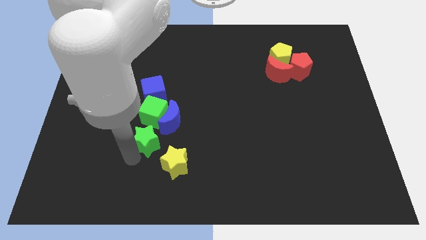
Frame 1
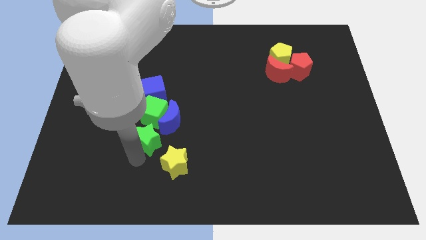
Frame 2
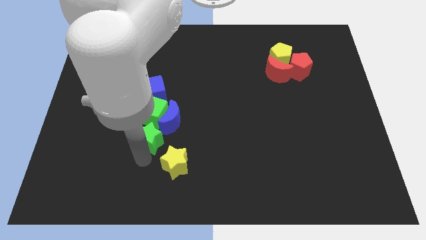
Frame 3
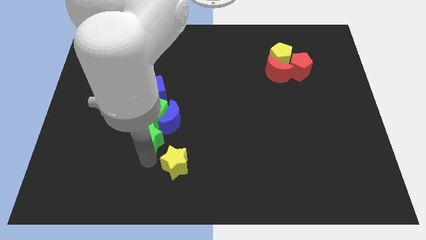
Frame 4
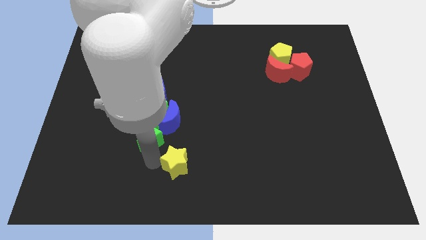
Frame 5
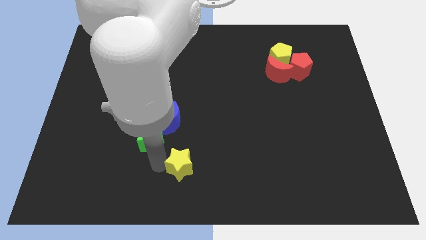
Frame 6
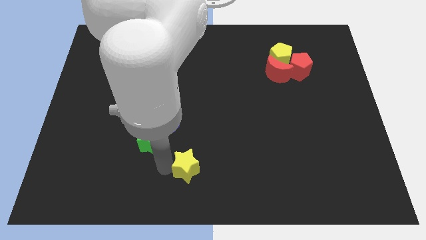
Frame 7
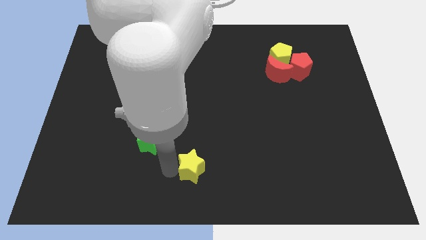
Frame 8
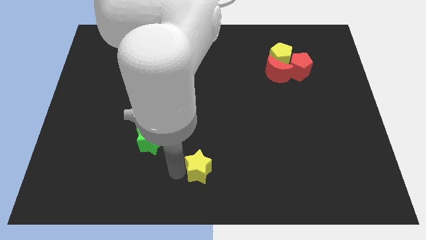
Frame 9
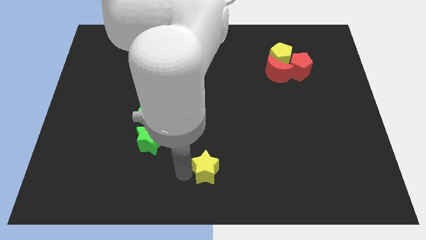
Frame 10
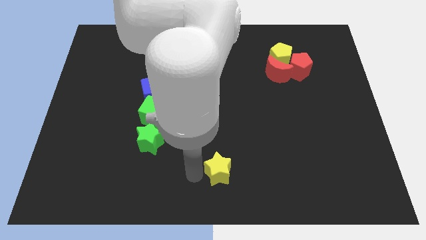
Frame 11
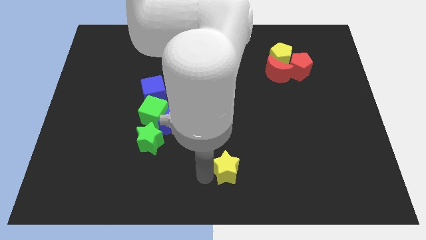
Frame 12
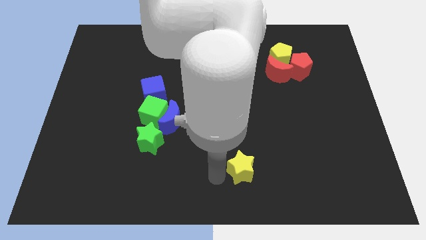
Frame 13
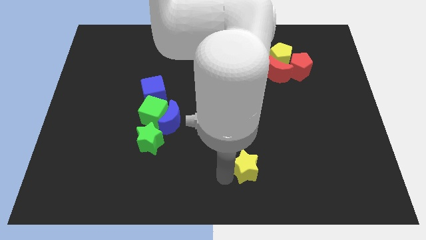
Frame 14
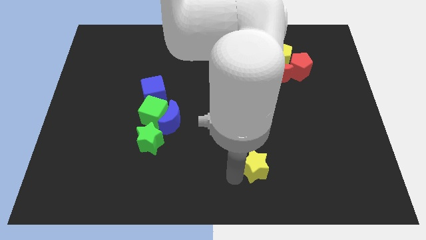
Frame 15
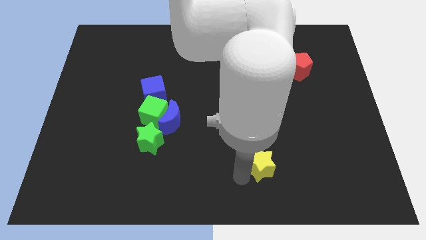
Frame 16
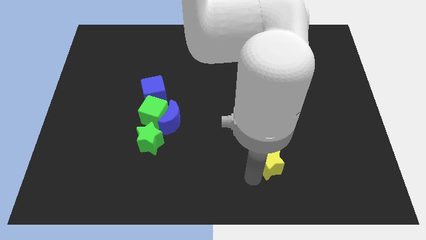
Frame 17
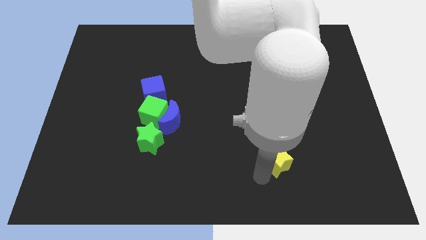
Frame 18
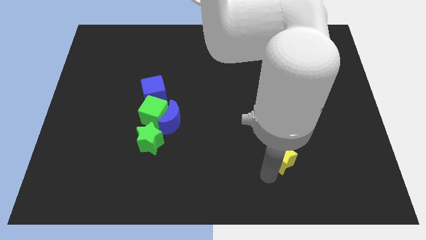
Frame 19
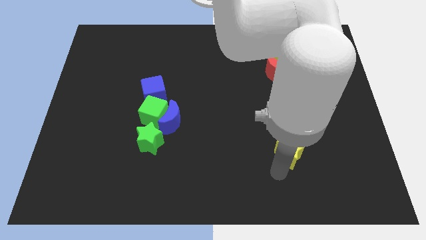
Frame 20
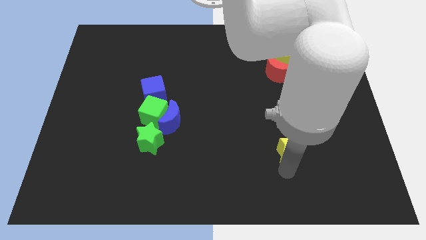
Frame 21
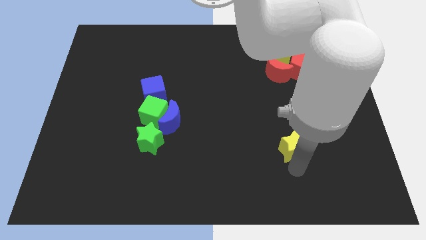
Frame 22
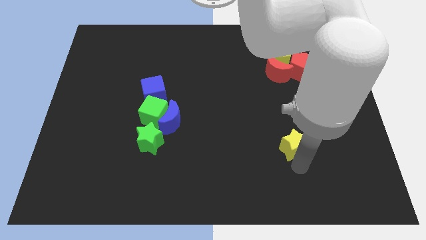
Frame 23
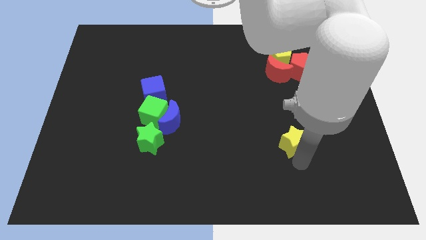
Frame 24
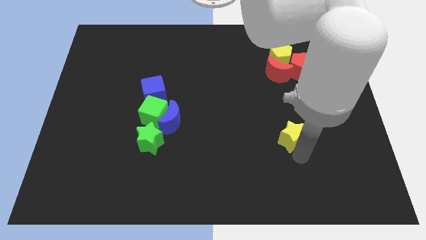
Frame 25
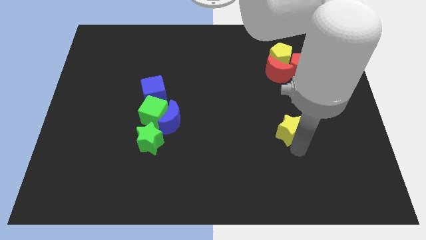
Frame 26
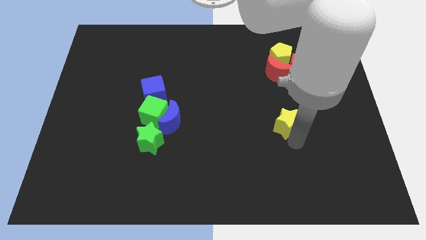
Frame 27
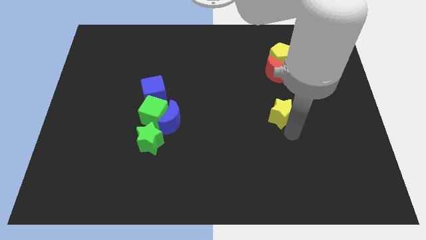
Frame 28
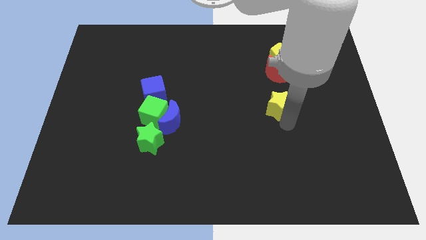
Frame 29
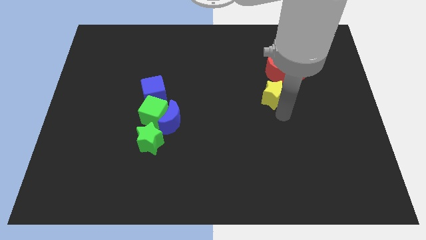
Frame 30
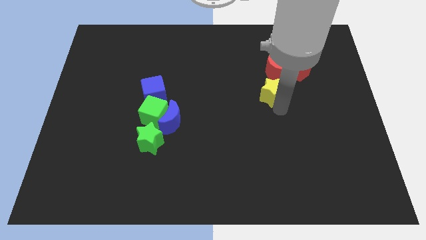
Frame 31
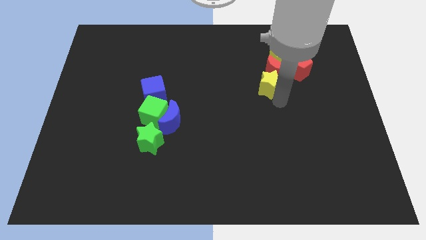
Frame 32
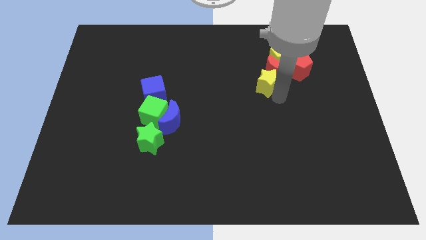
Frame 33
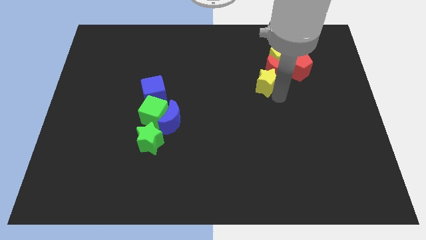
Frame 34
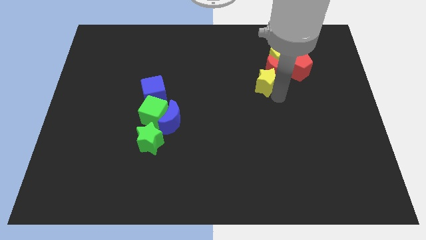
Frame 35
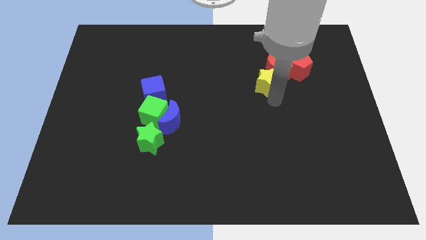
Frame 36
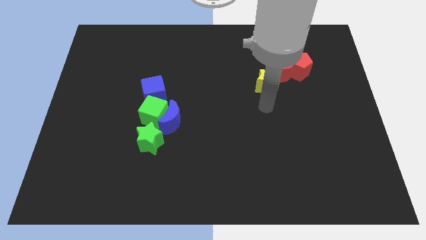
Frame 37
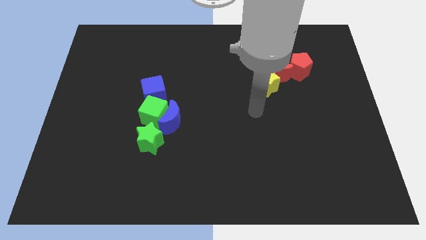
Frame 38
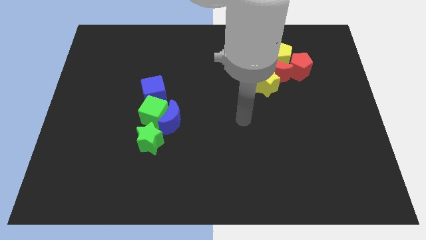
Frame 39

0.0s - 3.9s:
push the yellow star into the red crescent

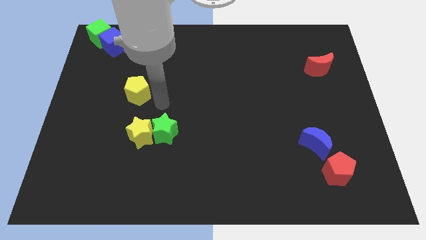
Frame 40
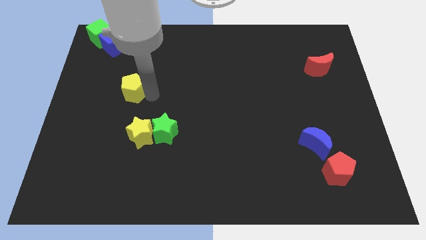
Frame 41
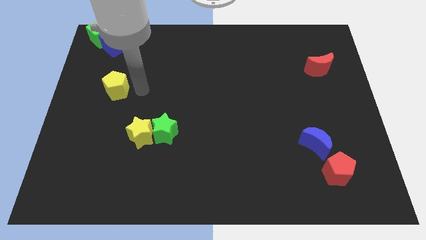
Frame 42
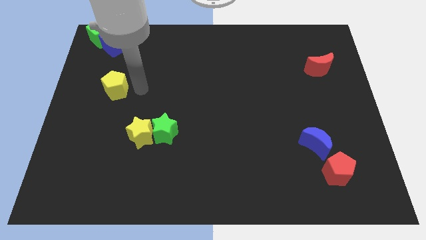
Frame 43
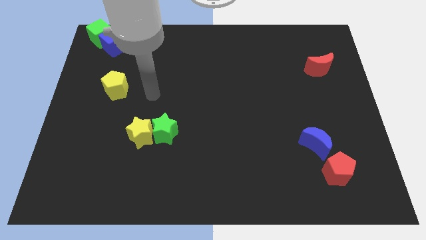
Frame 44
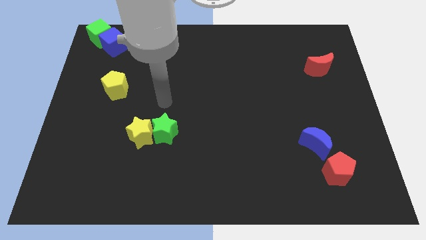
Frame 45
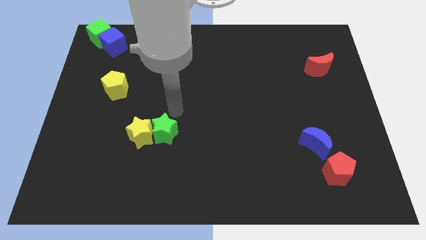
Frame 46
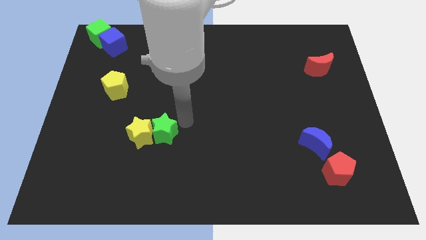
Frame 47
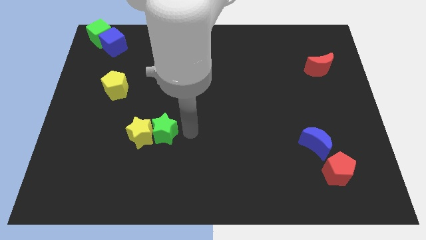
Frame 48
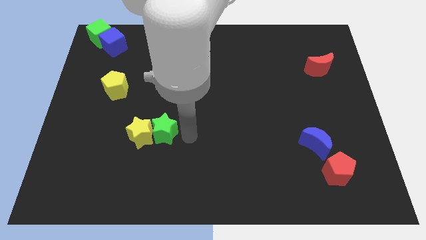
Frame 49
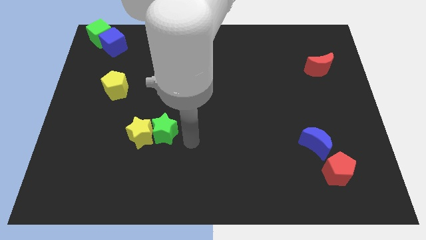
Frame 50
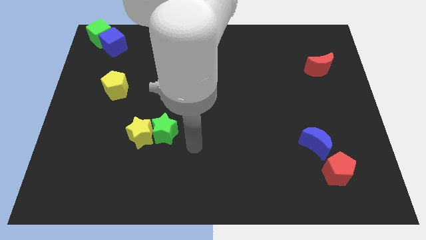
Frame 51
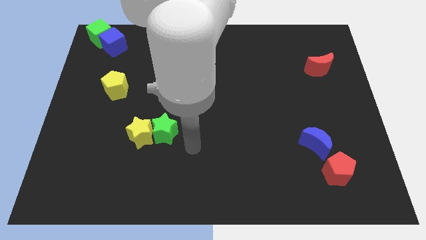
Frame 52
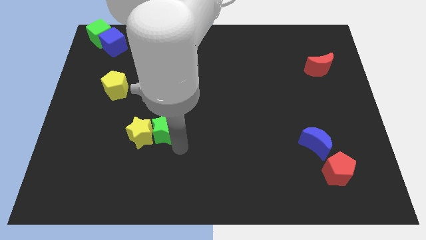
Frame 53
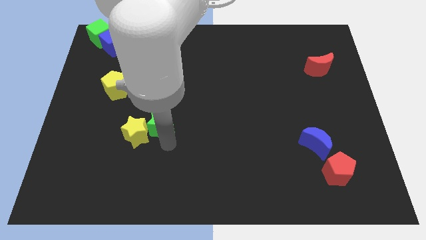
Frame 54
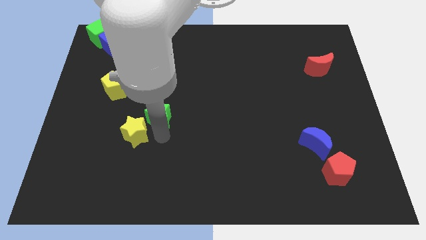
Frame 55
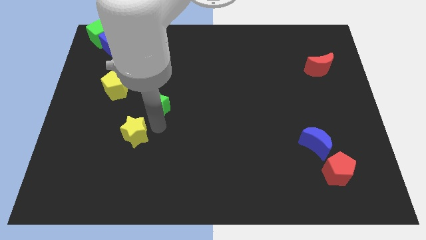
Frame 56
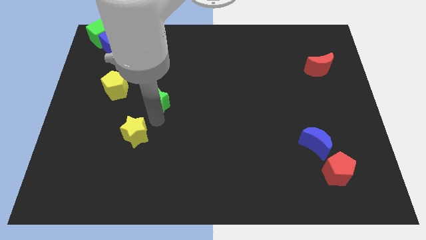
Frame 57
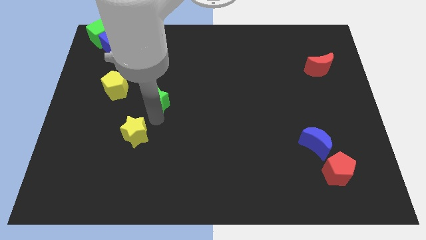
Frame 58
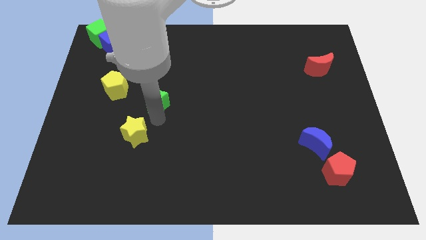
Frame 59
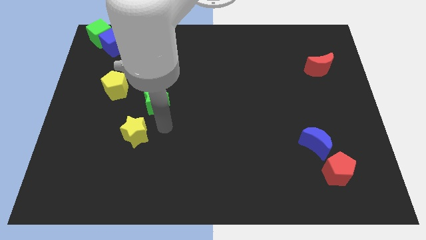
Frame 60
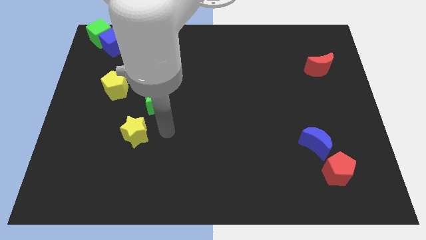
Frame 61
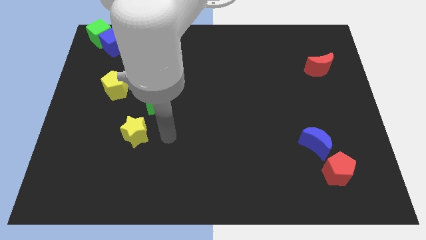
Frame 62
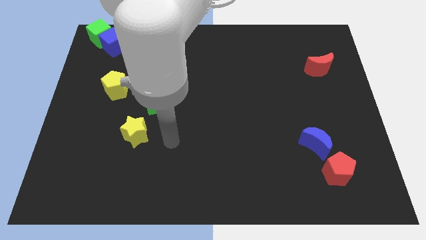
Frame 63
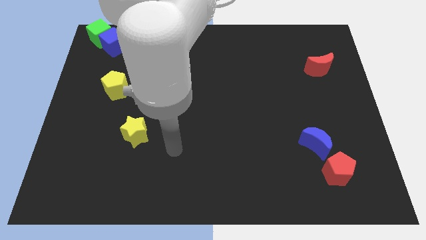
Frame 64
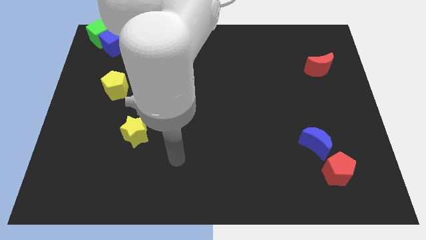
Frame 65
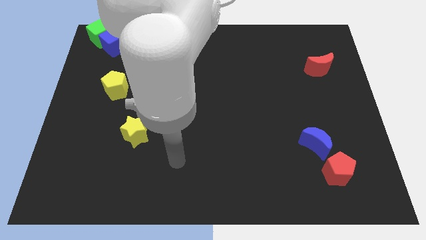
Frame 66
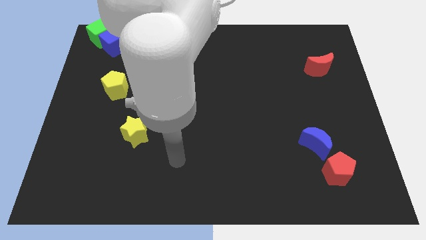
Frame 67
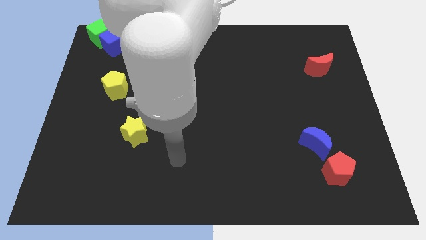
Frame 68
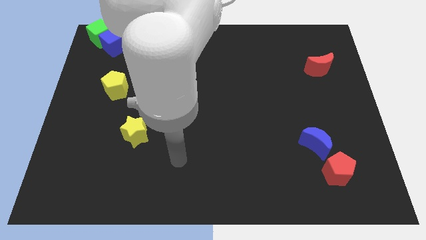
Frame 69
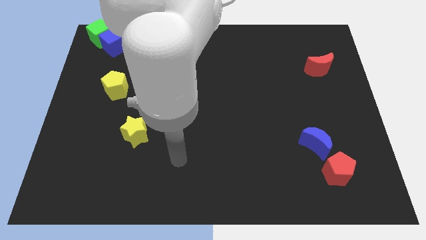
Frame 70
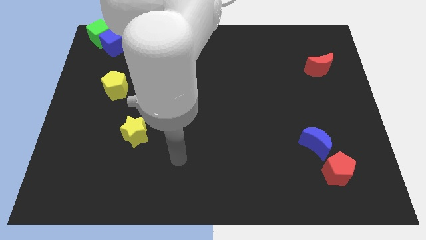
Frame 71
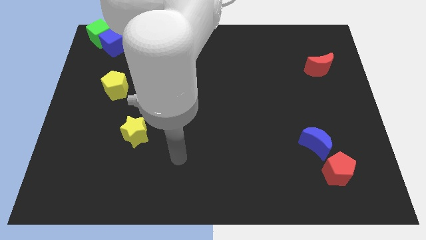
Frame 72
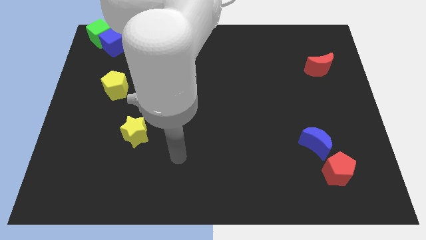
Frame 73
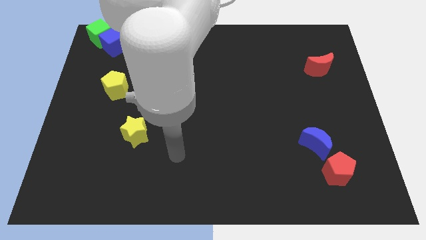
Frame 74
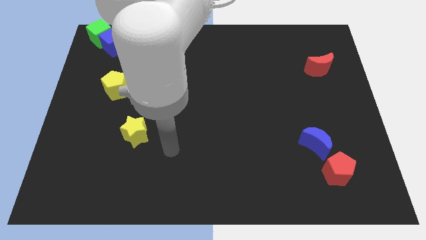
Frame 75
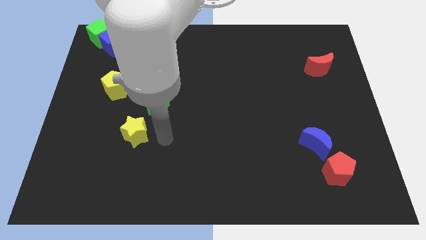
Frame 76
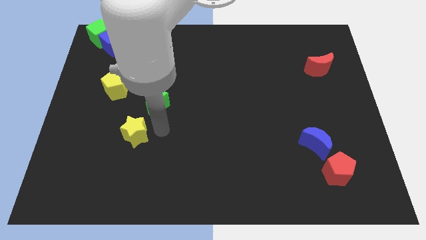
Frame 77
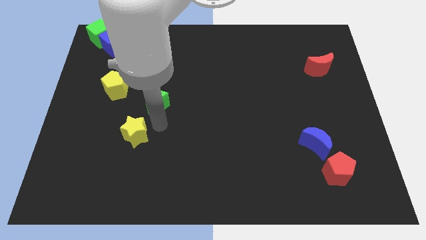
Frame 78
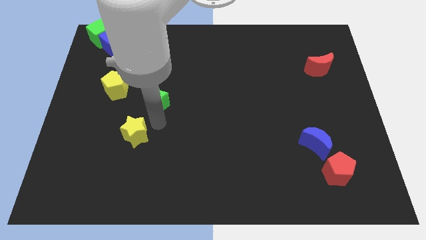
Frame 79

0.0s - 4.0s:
push the green star away from the yellow star

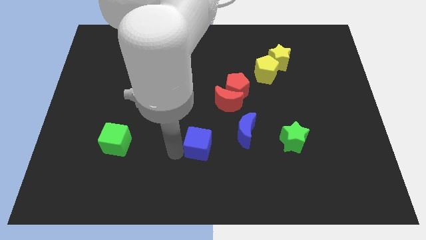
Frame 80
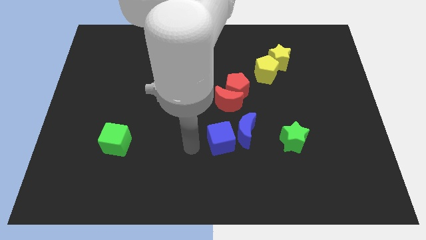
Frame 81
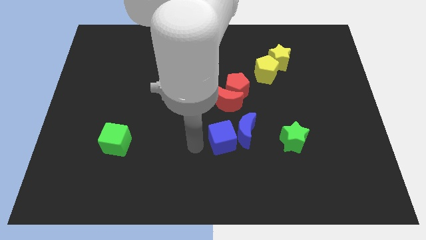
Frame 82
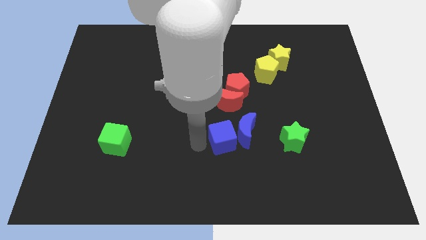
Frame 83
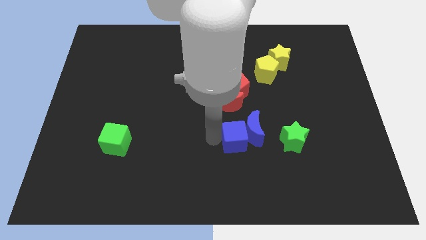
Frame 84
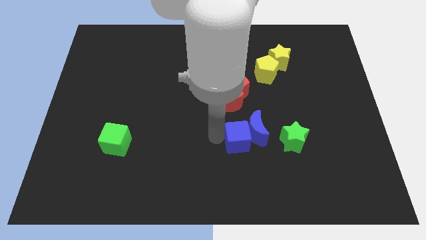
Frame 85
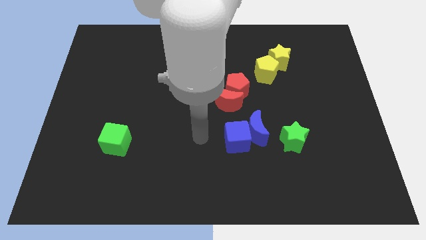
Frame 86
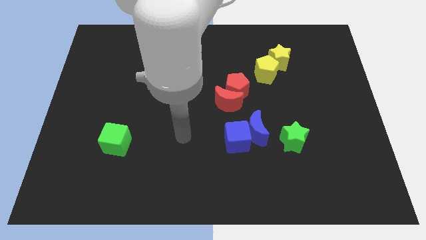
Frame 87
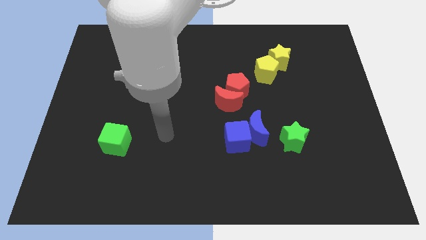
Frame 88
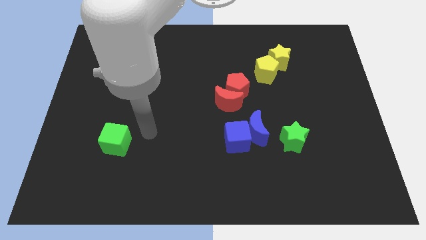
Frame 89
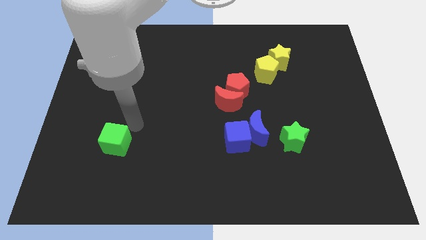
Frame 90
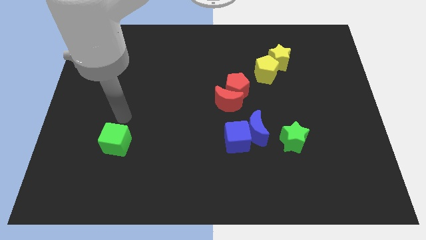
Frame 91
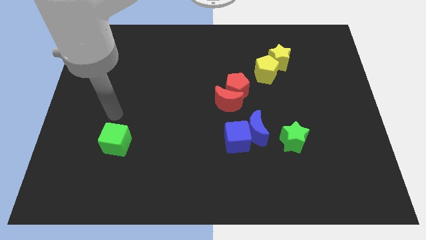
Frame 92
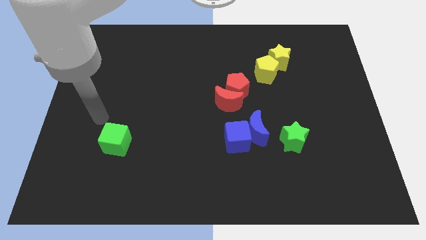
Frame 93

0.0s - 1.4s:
place the blue cube vertically below the red moon
